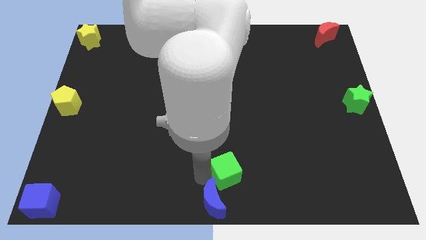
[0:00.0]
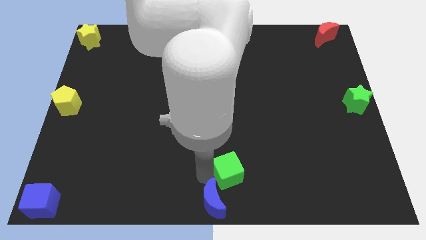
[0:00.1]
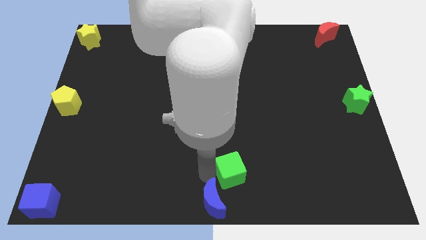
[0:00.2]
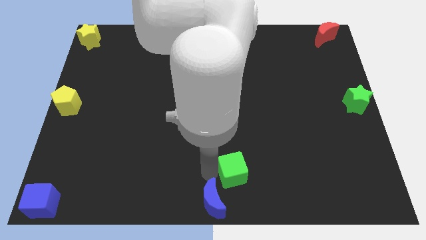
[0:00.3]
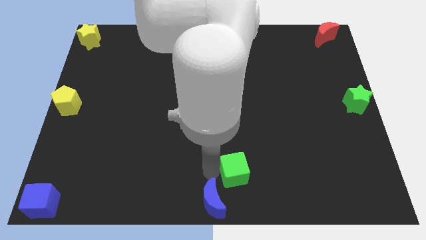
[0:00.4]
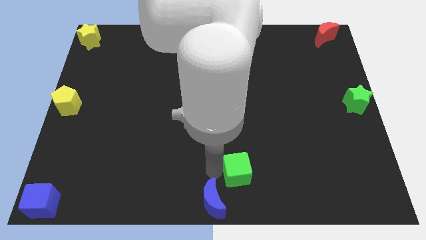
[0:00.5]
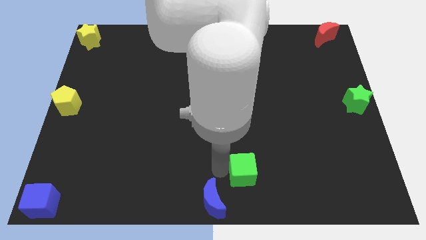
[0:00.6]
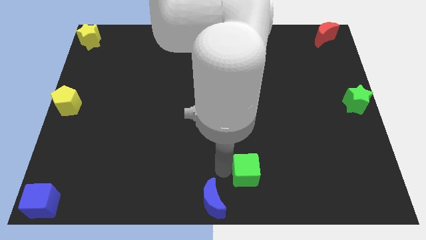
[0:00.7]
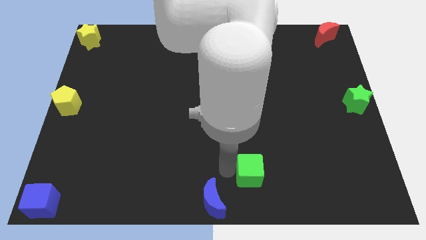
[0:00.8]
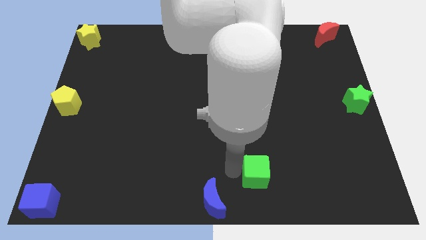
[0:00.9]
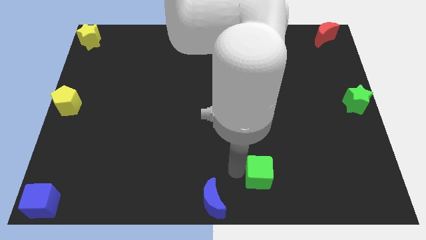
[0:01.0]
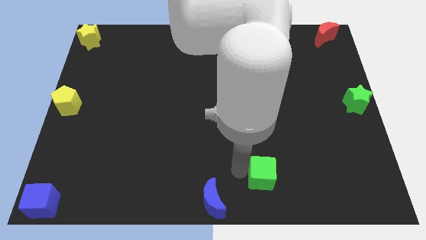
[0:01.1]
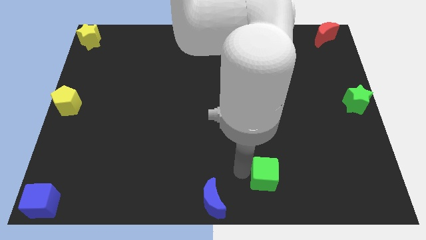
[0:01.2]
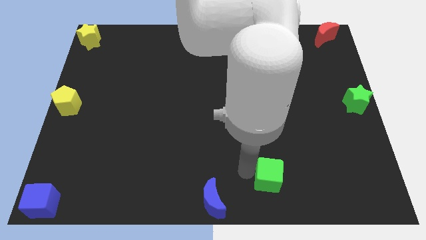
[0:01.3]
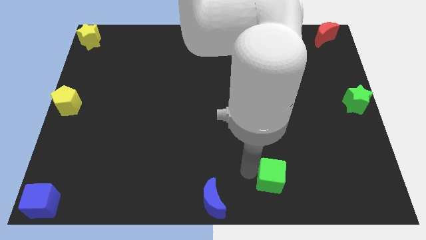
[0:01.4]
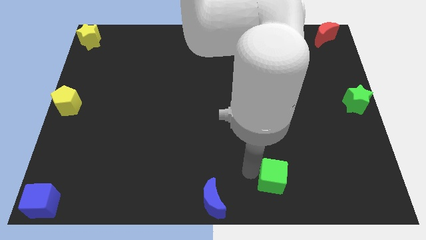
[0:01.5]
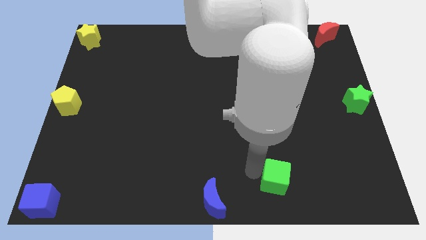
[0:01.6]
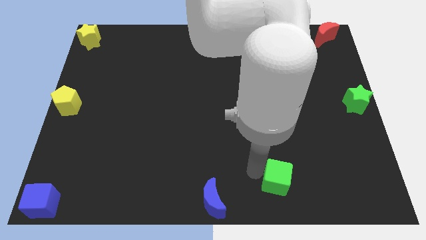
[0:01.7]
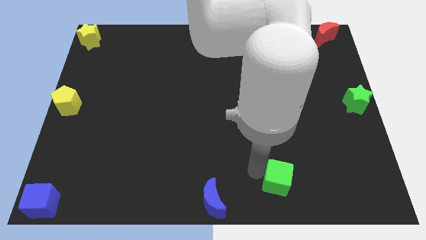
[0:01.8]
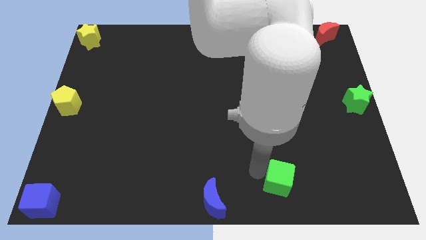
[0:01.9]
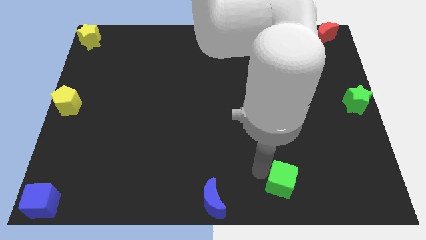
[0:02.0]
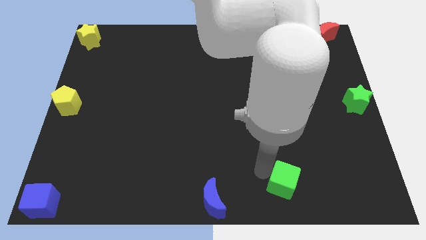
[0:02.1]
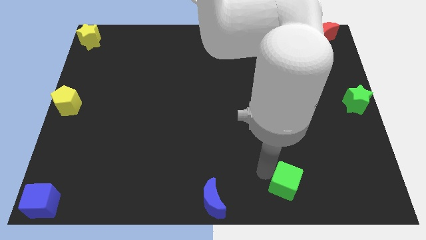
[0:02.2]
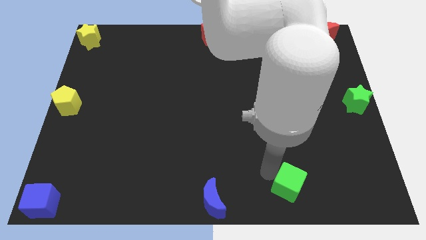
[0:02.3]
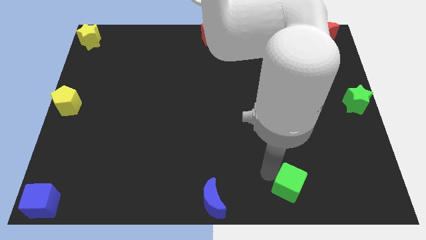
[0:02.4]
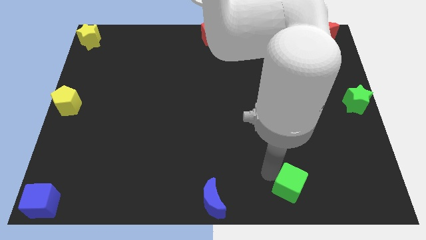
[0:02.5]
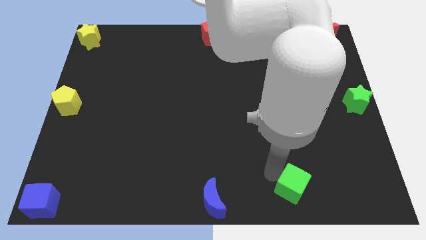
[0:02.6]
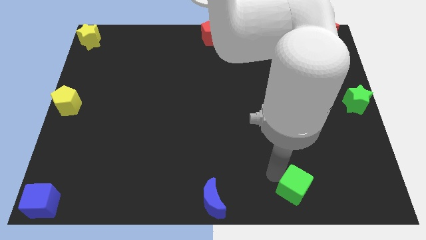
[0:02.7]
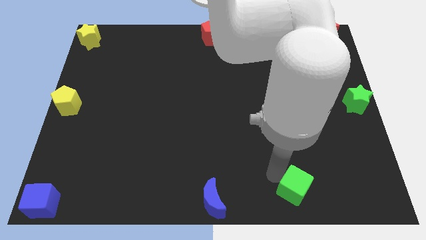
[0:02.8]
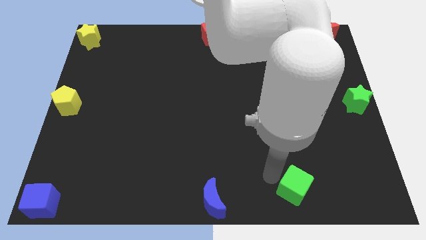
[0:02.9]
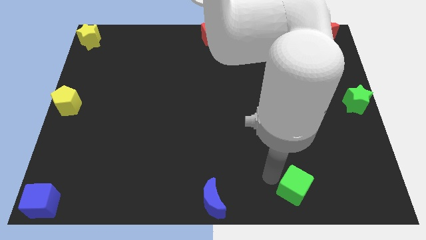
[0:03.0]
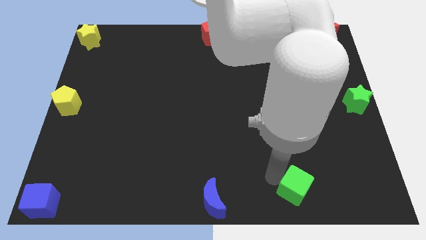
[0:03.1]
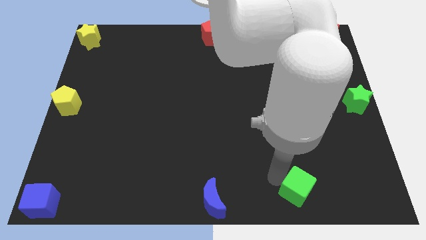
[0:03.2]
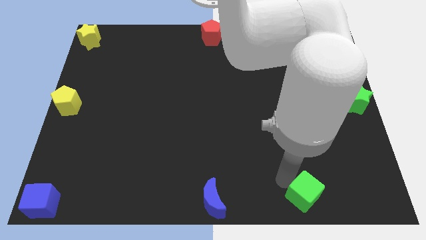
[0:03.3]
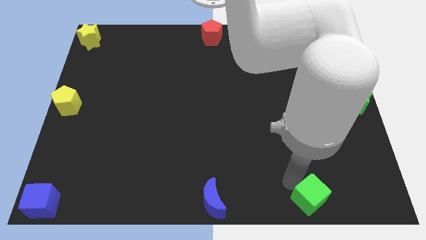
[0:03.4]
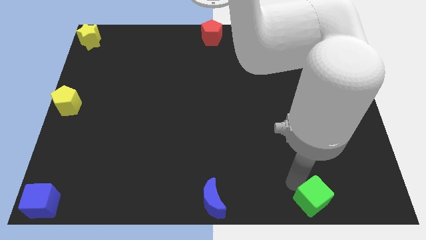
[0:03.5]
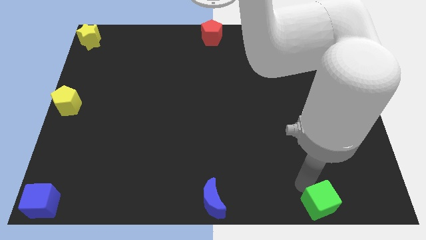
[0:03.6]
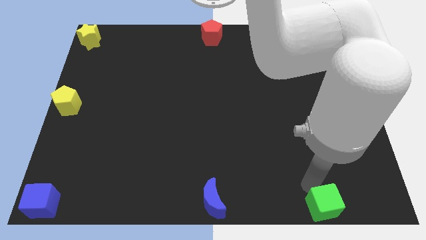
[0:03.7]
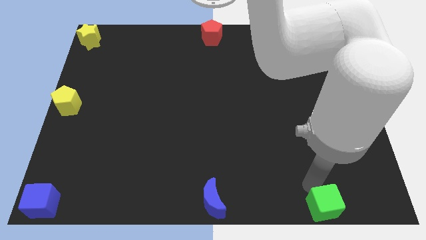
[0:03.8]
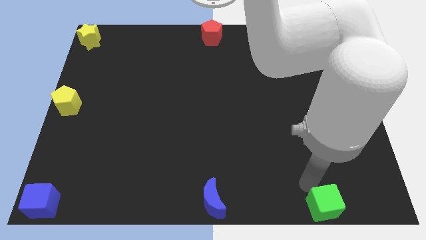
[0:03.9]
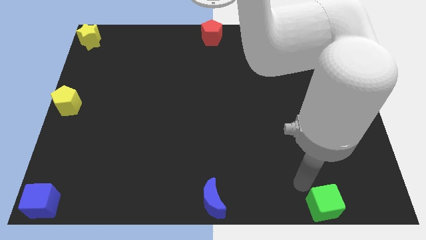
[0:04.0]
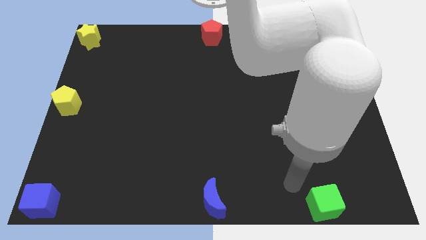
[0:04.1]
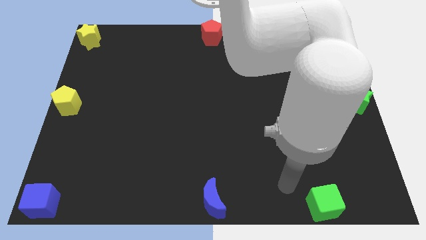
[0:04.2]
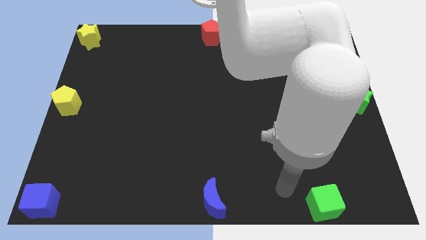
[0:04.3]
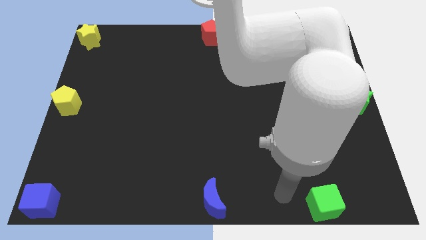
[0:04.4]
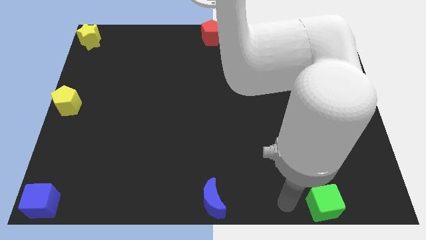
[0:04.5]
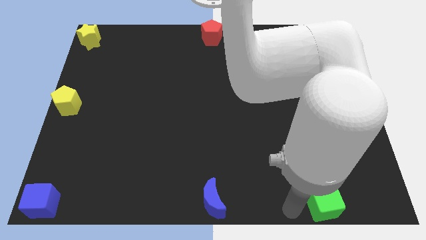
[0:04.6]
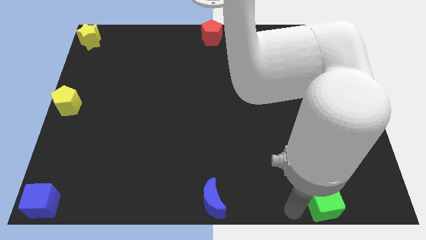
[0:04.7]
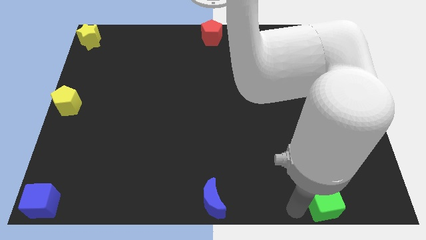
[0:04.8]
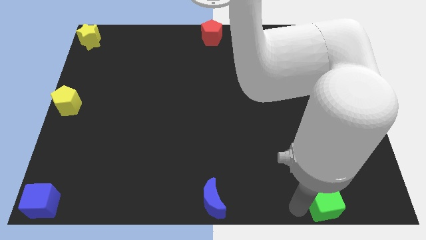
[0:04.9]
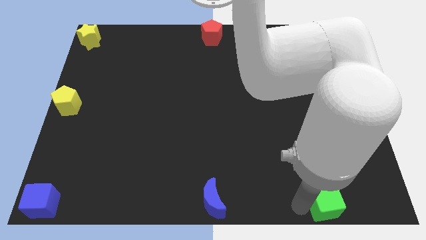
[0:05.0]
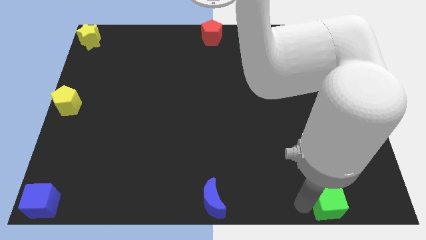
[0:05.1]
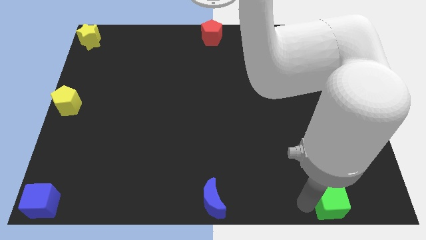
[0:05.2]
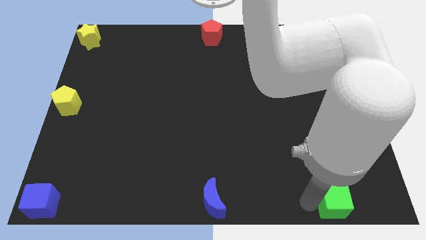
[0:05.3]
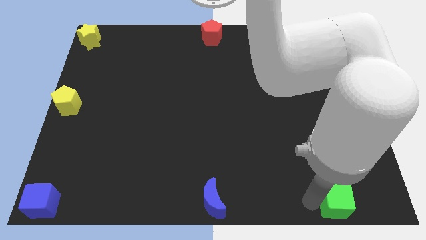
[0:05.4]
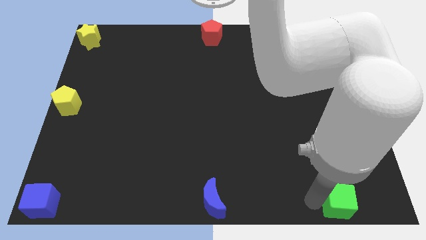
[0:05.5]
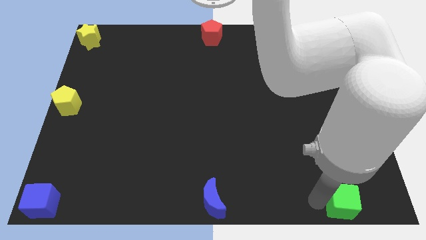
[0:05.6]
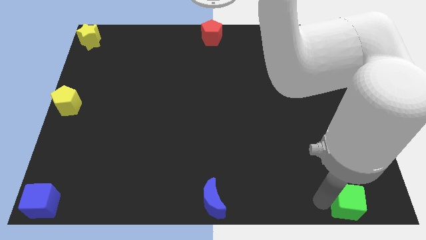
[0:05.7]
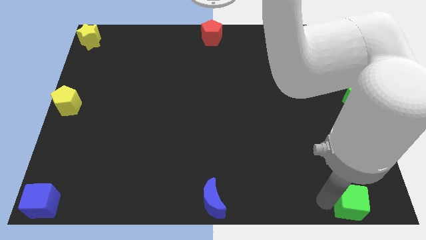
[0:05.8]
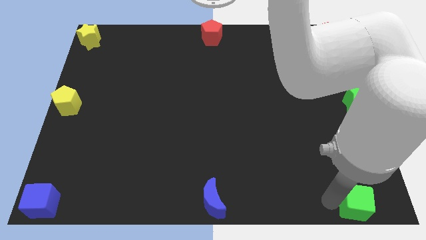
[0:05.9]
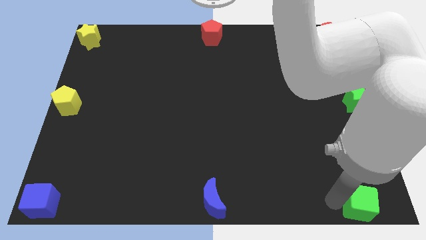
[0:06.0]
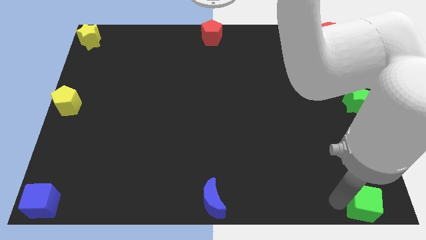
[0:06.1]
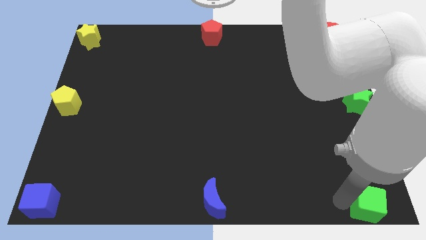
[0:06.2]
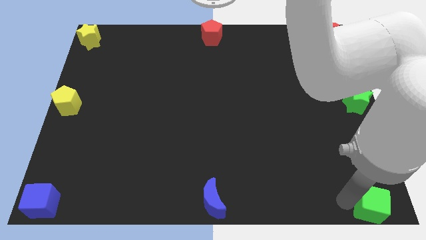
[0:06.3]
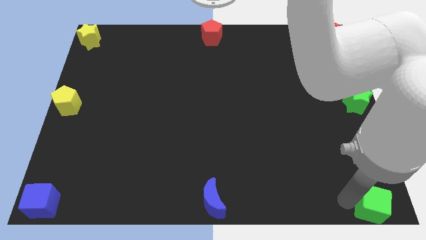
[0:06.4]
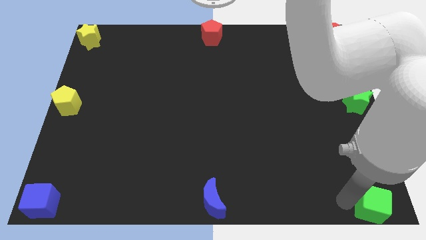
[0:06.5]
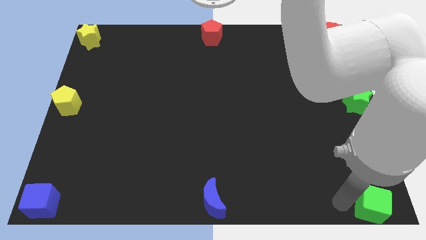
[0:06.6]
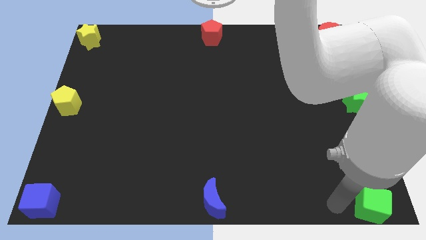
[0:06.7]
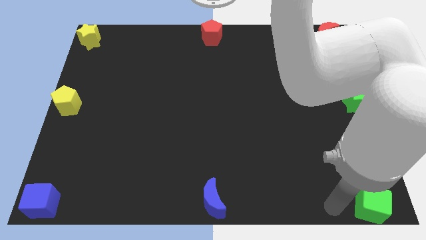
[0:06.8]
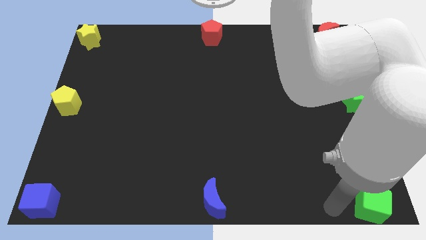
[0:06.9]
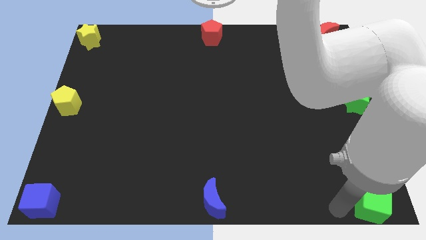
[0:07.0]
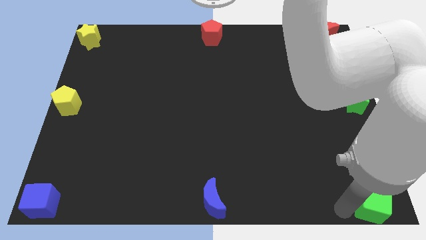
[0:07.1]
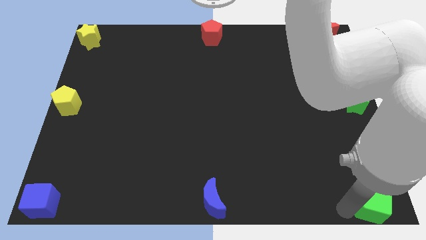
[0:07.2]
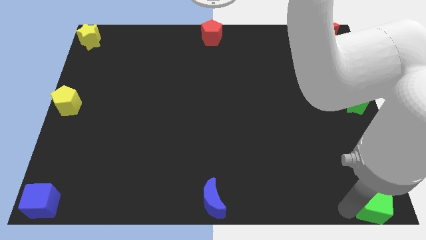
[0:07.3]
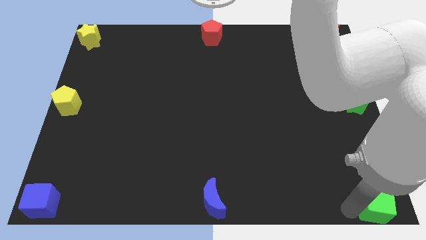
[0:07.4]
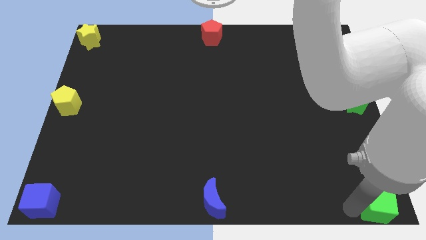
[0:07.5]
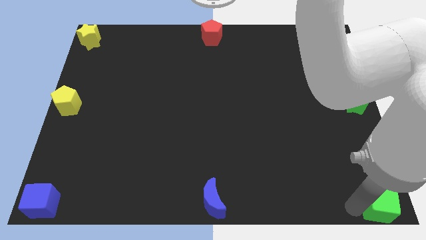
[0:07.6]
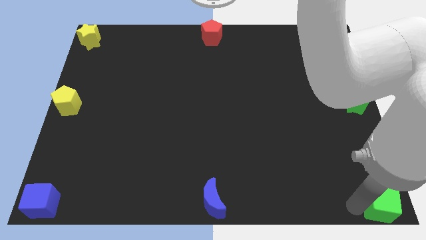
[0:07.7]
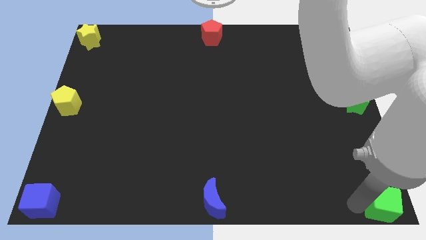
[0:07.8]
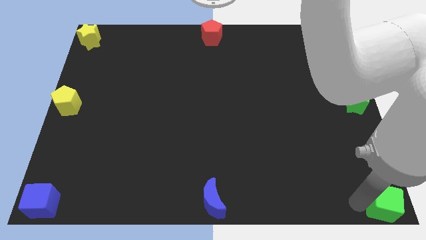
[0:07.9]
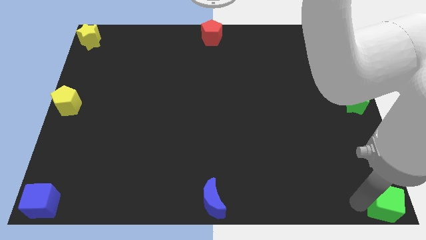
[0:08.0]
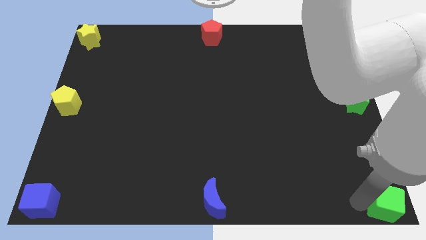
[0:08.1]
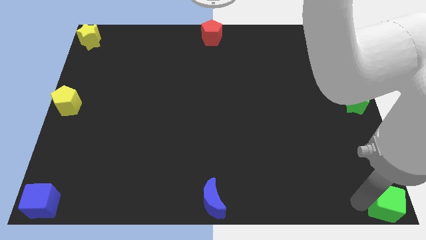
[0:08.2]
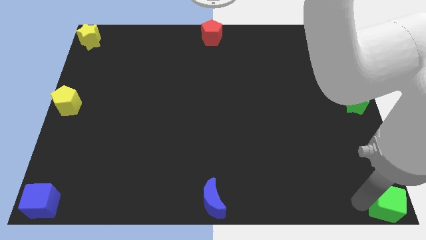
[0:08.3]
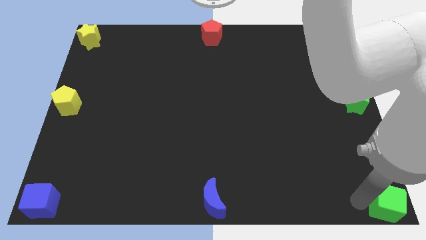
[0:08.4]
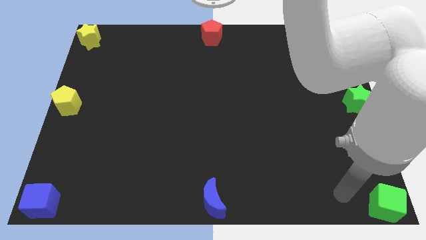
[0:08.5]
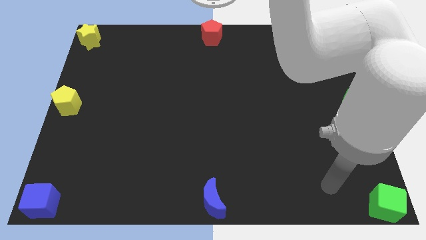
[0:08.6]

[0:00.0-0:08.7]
place a green cube on the bottom right corner of the board

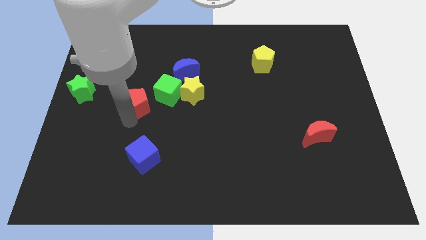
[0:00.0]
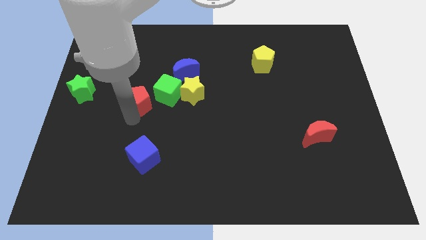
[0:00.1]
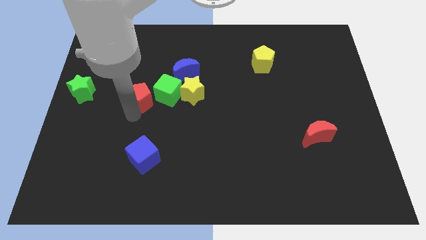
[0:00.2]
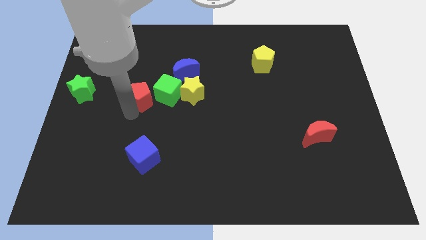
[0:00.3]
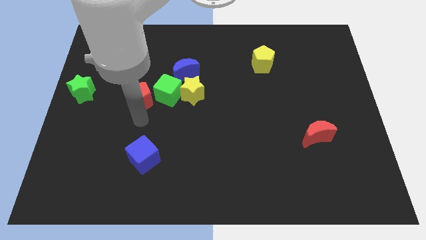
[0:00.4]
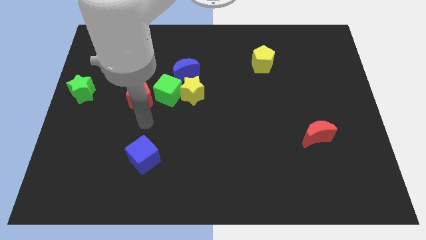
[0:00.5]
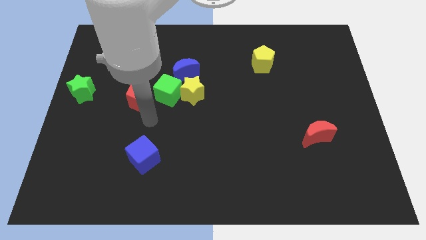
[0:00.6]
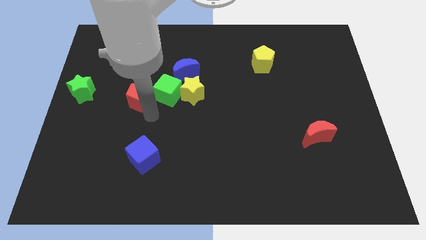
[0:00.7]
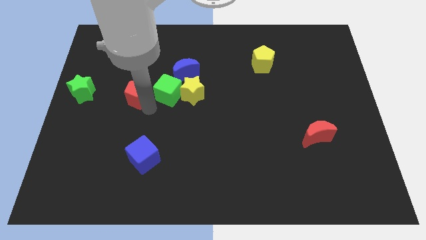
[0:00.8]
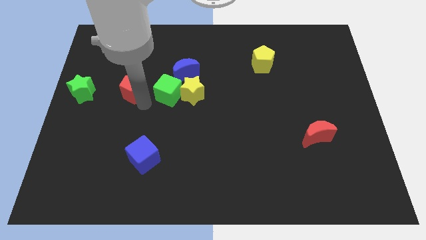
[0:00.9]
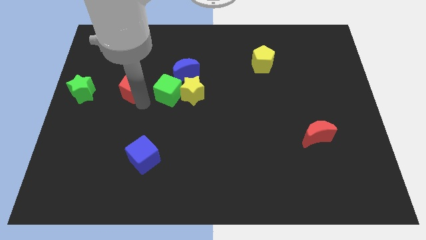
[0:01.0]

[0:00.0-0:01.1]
push the red pentagon slightly to the top
